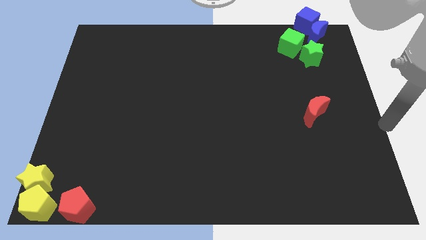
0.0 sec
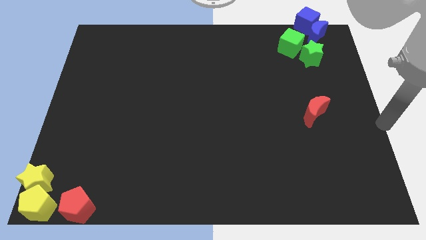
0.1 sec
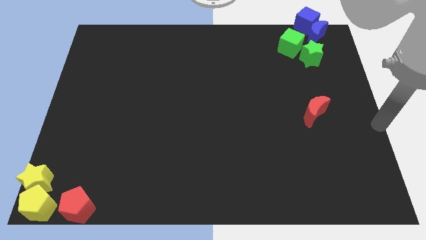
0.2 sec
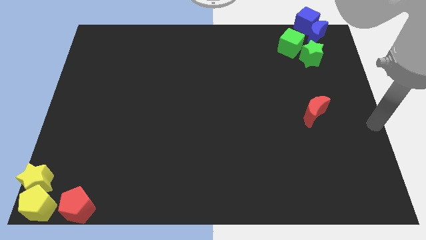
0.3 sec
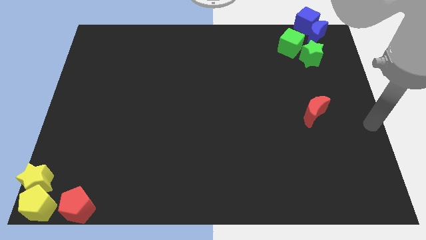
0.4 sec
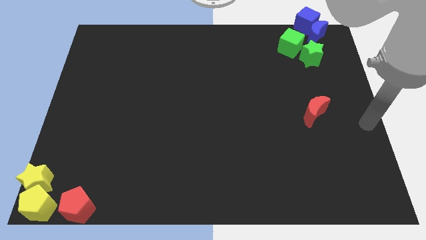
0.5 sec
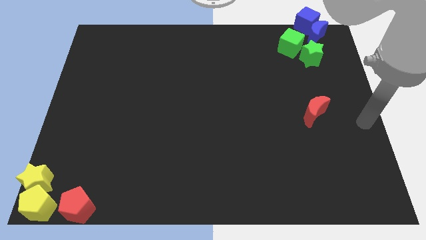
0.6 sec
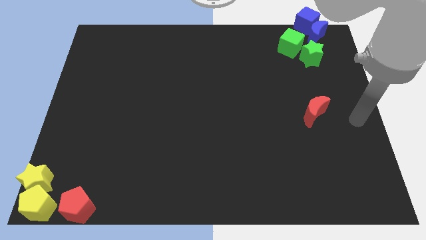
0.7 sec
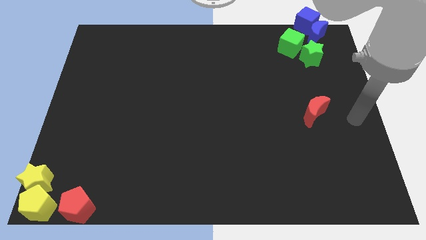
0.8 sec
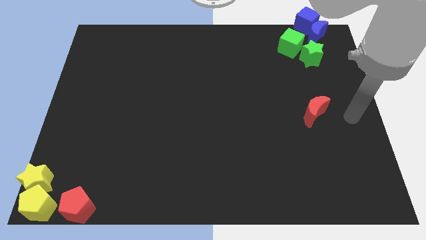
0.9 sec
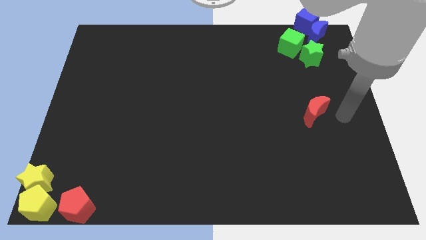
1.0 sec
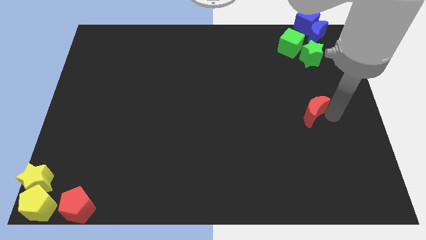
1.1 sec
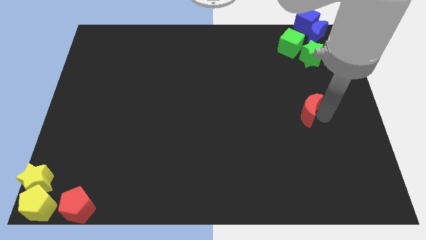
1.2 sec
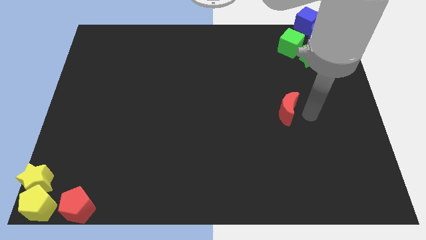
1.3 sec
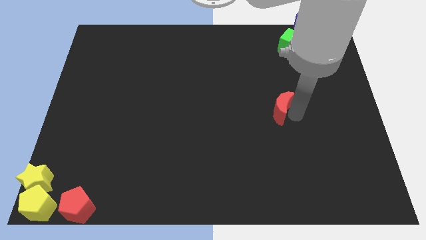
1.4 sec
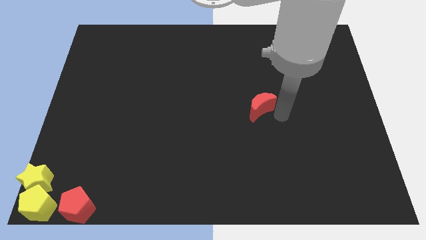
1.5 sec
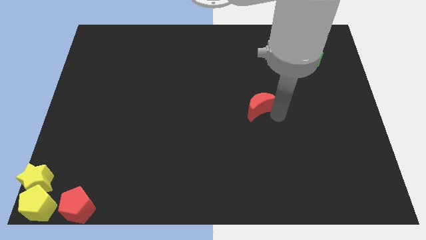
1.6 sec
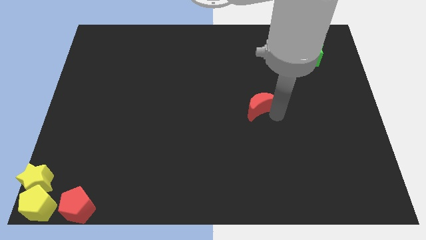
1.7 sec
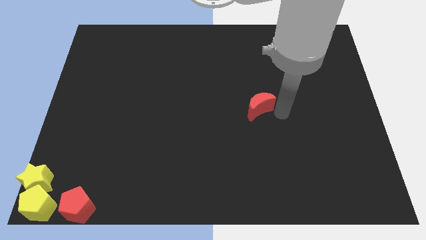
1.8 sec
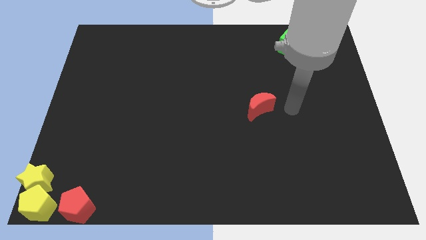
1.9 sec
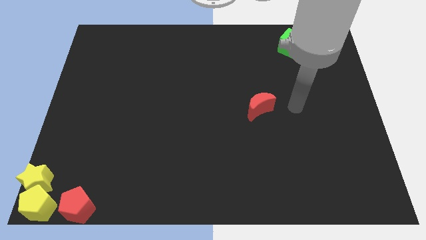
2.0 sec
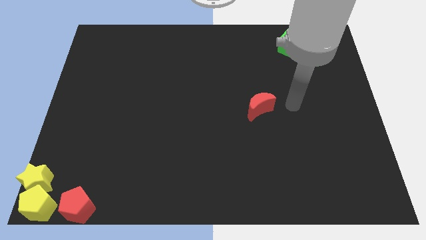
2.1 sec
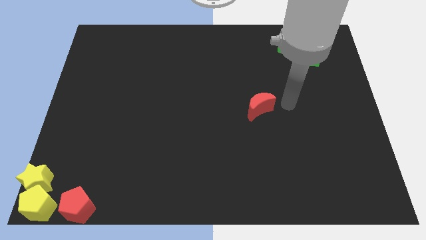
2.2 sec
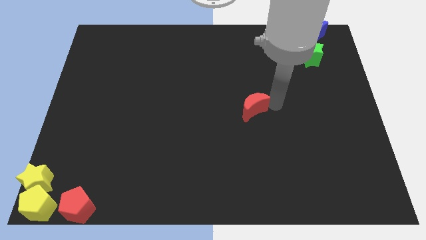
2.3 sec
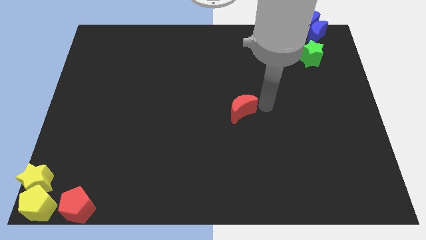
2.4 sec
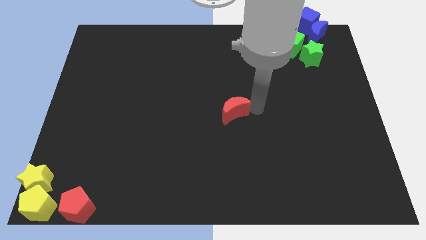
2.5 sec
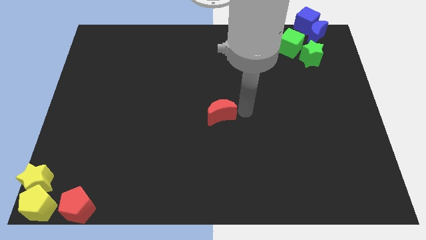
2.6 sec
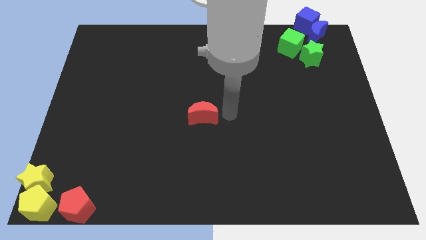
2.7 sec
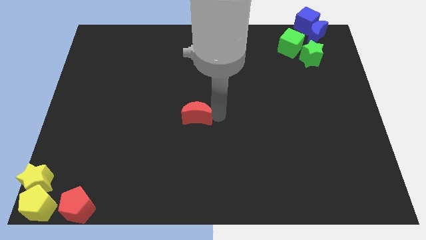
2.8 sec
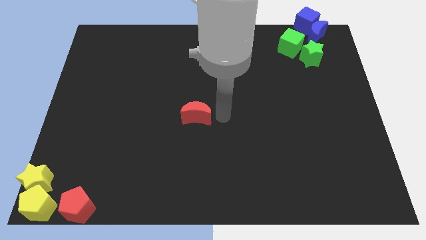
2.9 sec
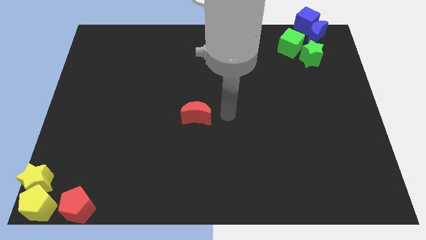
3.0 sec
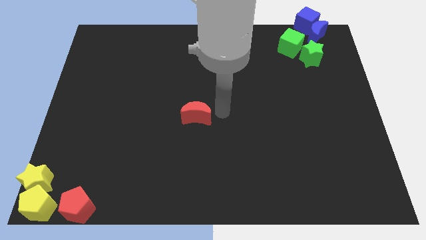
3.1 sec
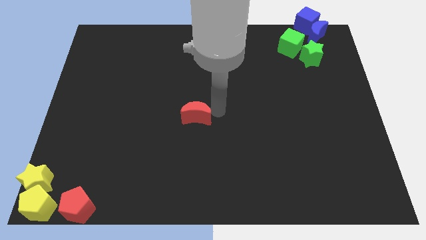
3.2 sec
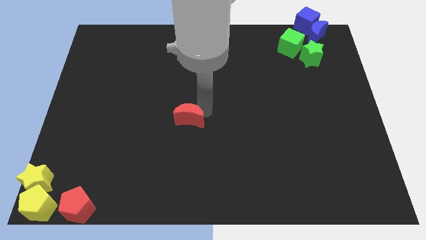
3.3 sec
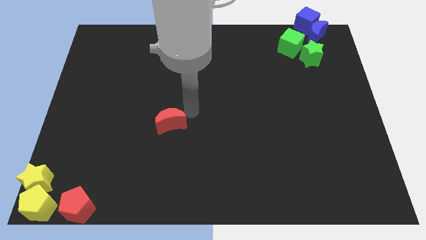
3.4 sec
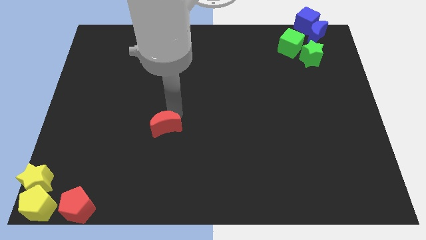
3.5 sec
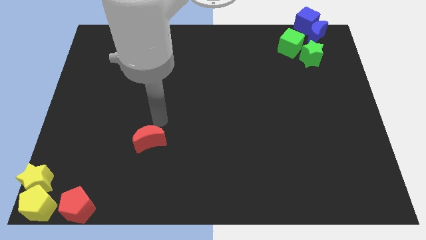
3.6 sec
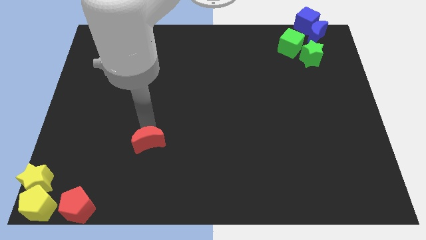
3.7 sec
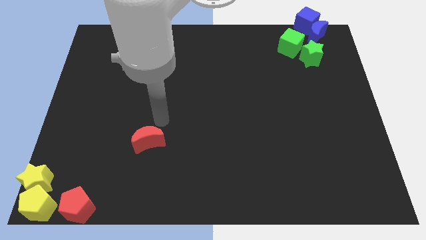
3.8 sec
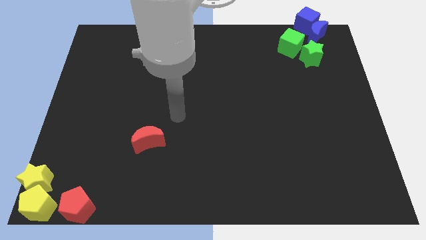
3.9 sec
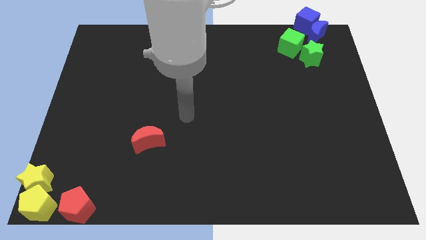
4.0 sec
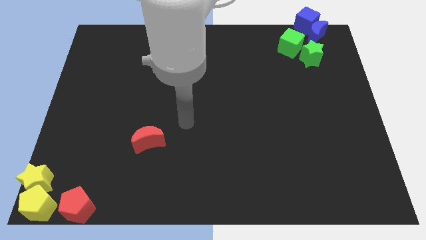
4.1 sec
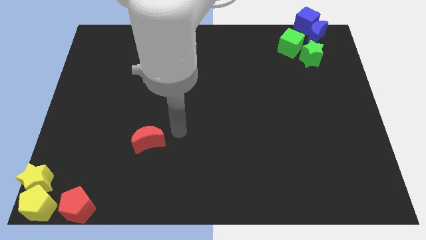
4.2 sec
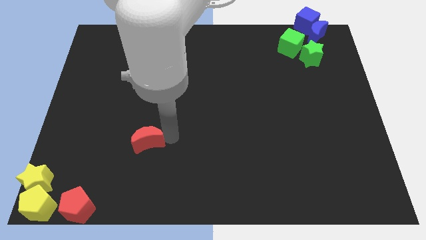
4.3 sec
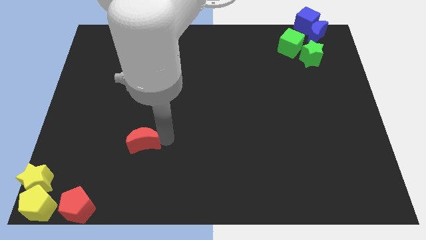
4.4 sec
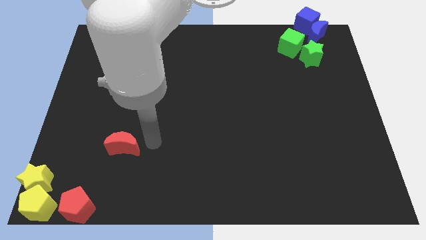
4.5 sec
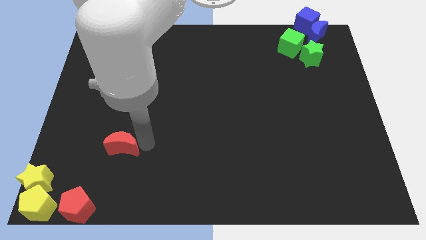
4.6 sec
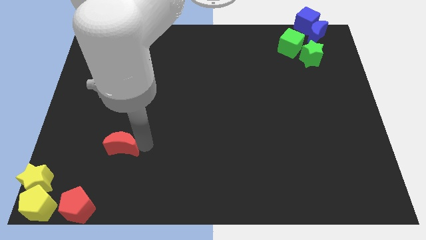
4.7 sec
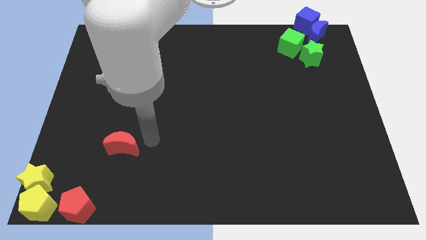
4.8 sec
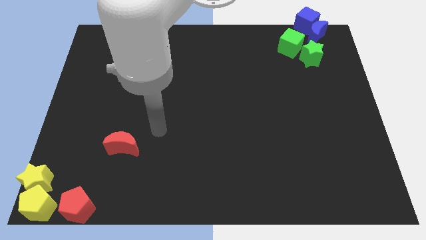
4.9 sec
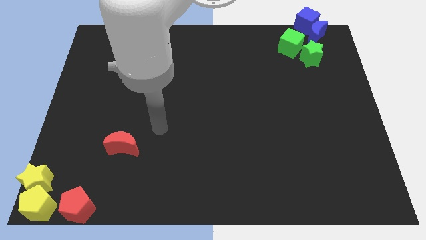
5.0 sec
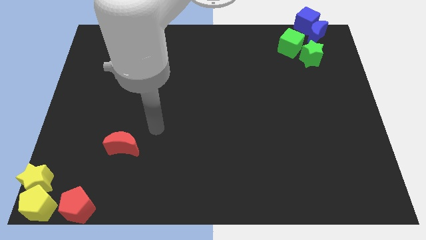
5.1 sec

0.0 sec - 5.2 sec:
drag the red moon diagonally top right to red pentagon

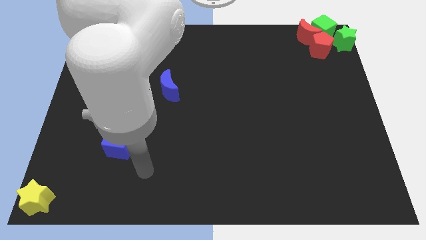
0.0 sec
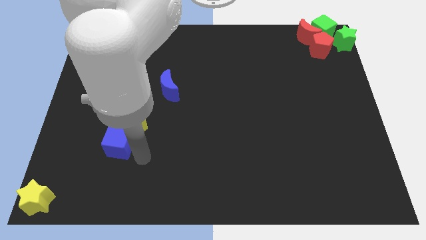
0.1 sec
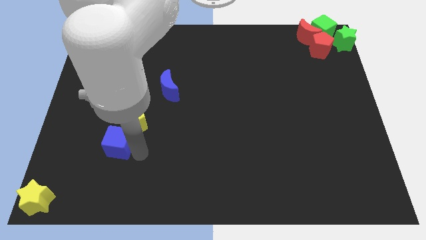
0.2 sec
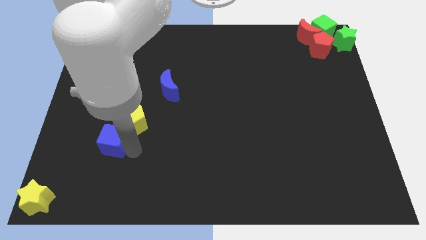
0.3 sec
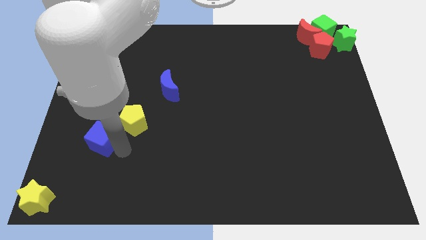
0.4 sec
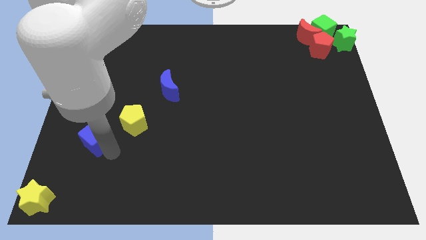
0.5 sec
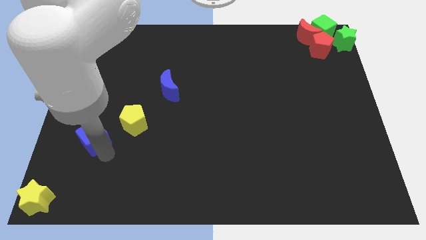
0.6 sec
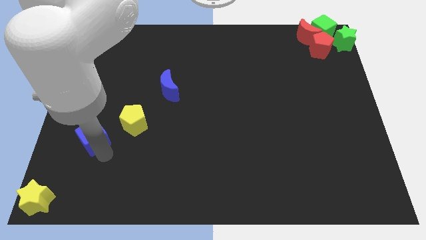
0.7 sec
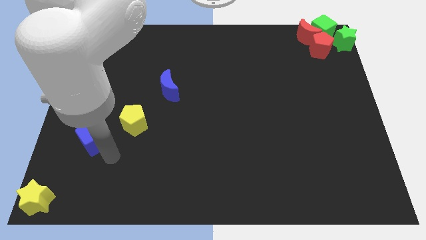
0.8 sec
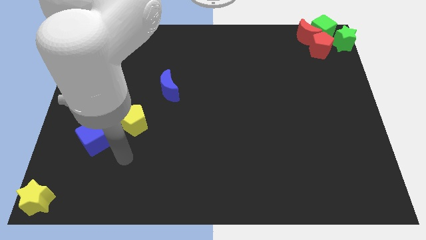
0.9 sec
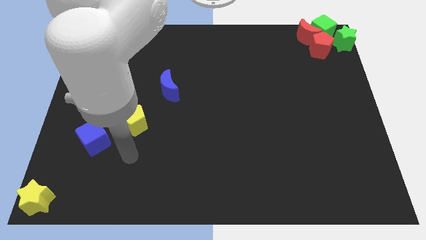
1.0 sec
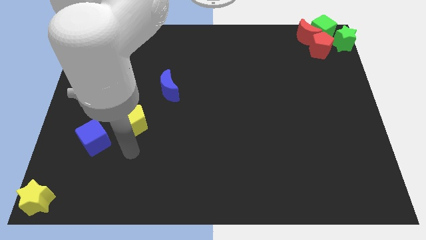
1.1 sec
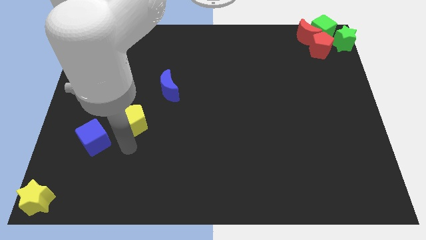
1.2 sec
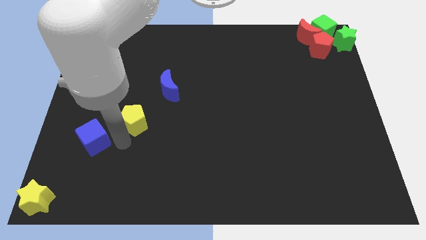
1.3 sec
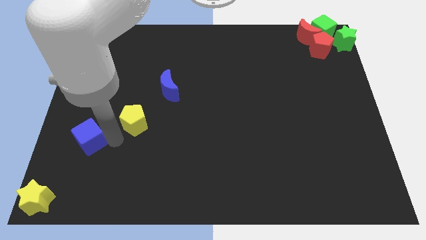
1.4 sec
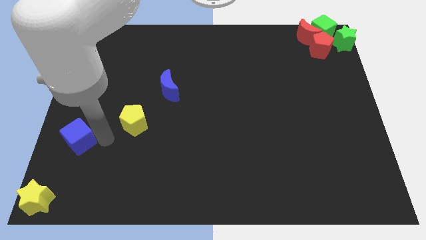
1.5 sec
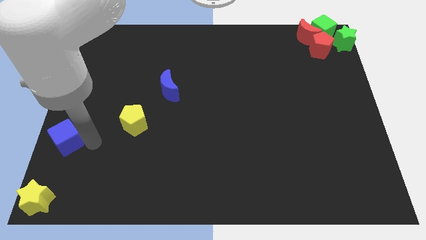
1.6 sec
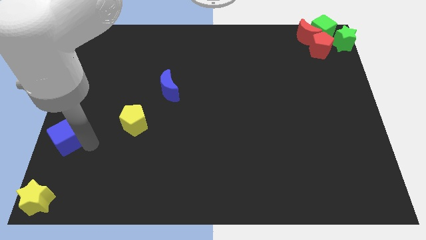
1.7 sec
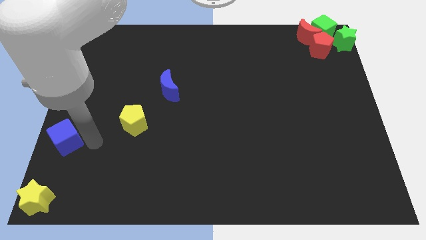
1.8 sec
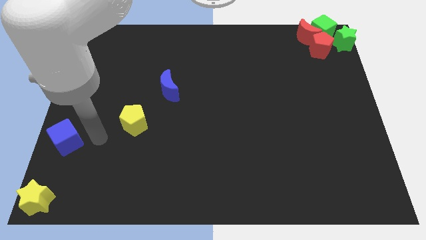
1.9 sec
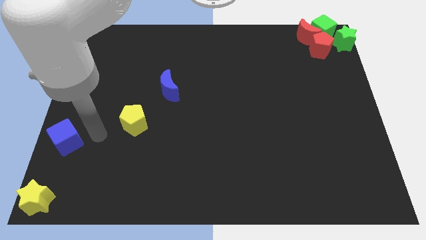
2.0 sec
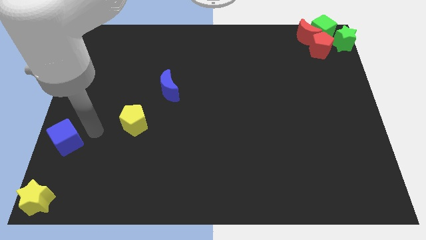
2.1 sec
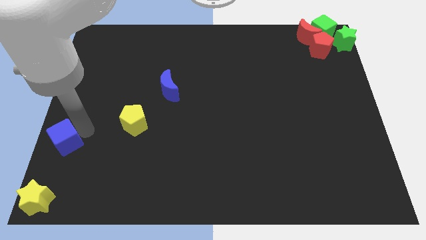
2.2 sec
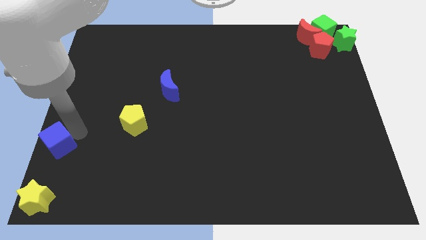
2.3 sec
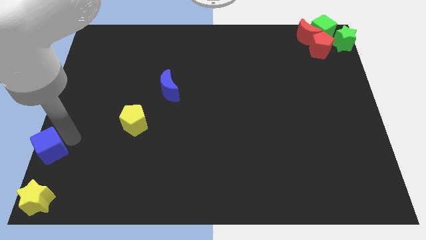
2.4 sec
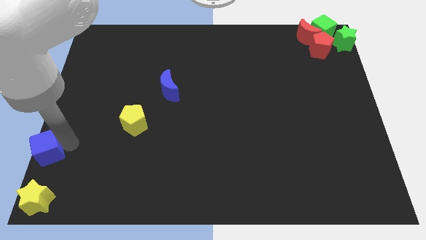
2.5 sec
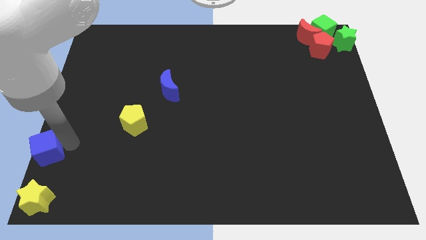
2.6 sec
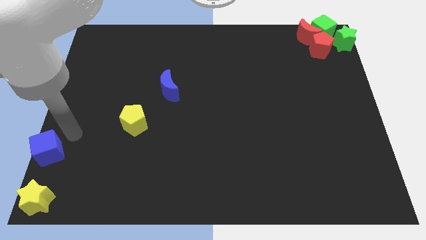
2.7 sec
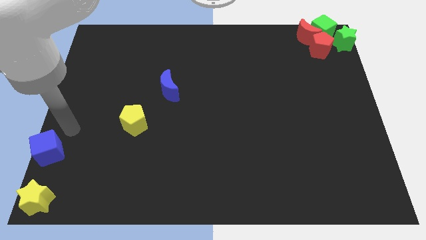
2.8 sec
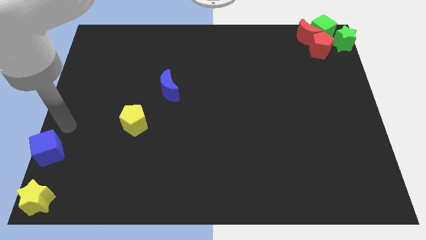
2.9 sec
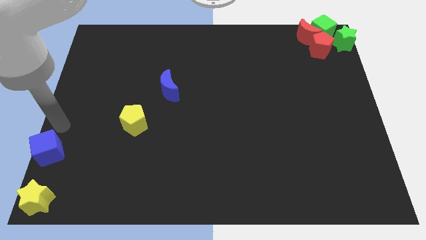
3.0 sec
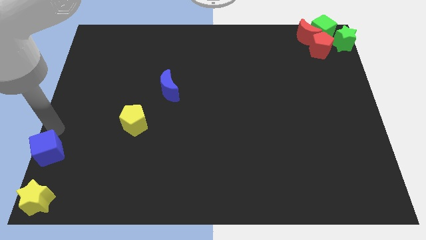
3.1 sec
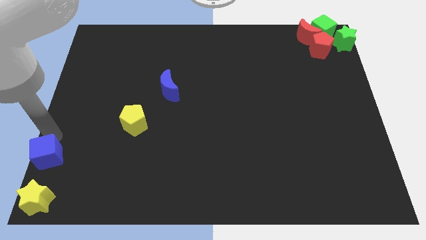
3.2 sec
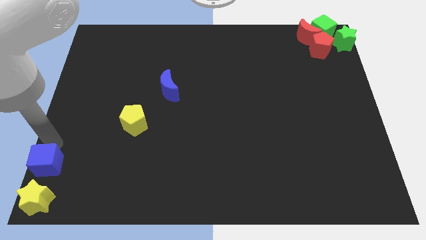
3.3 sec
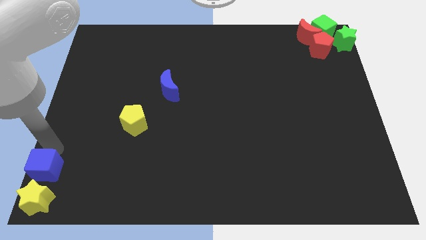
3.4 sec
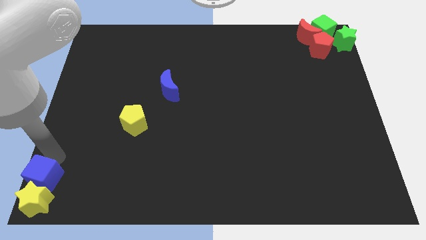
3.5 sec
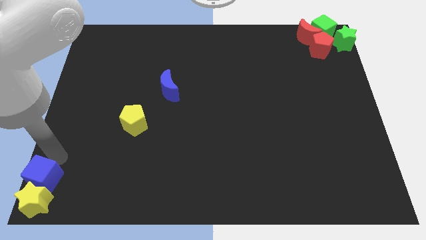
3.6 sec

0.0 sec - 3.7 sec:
move the blue cube close to the top of the yellow star

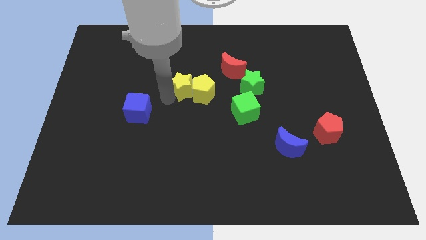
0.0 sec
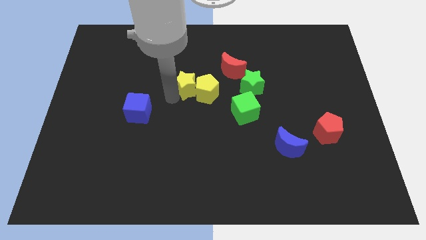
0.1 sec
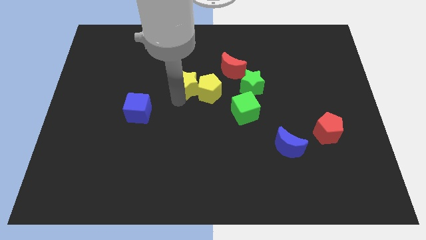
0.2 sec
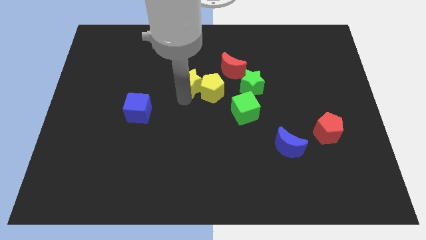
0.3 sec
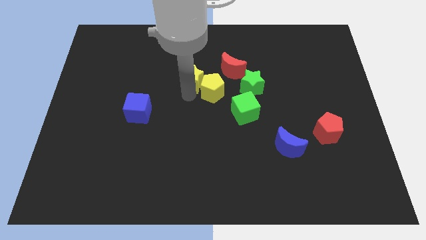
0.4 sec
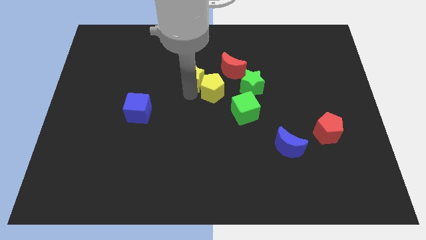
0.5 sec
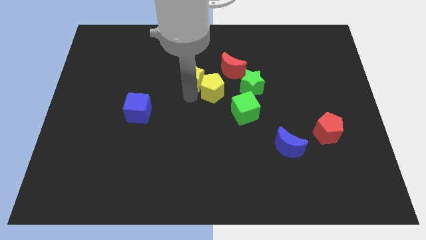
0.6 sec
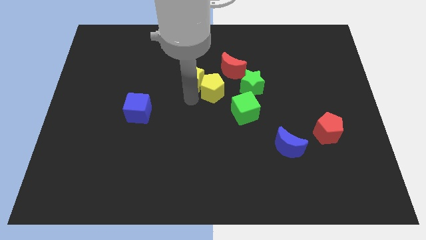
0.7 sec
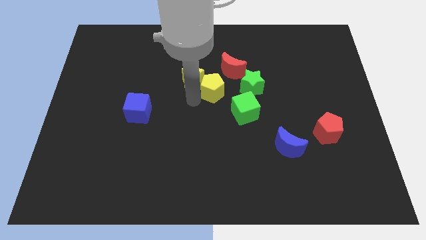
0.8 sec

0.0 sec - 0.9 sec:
push the yellow blocks towards the top side of the board
